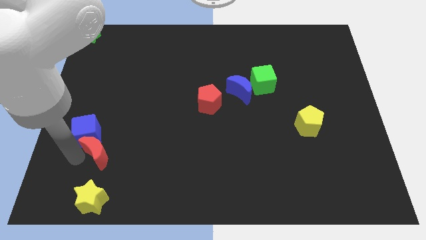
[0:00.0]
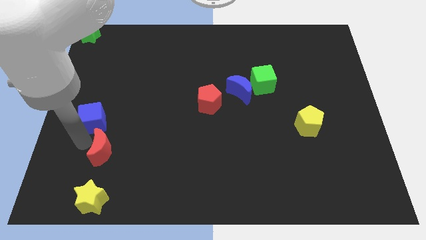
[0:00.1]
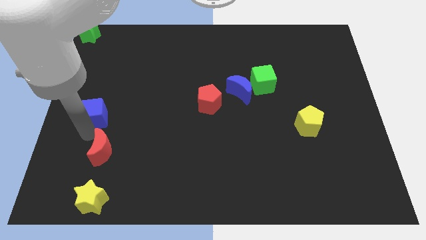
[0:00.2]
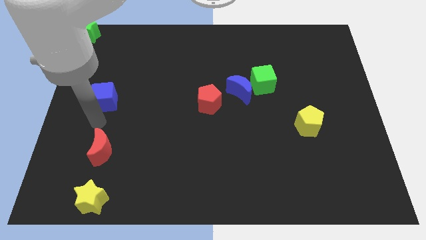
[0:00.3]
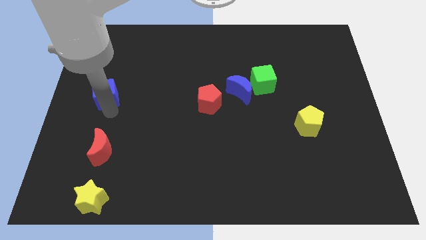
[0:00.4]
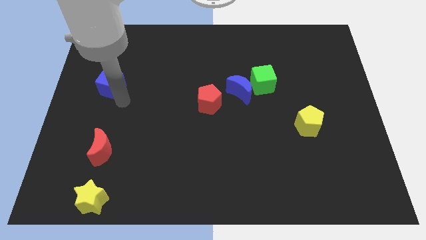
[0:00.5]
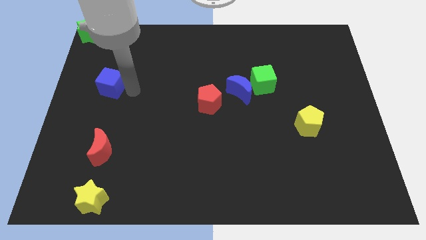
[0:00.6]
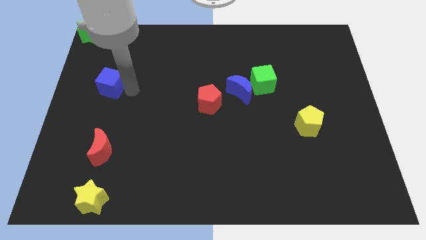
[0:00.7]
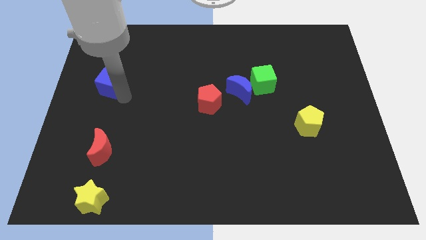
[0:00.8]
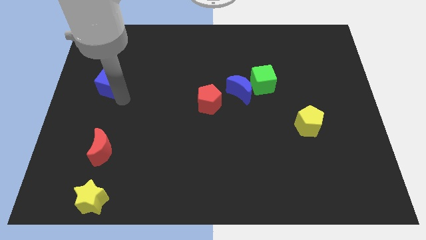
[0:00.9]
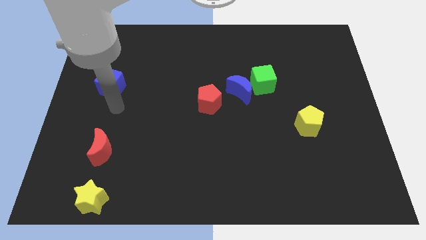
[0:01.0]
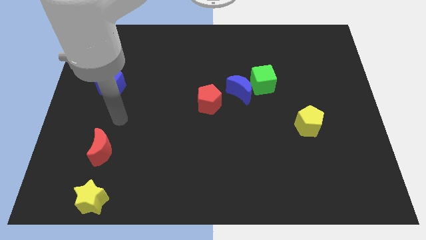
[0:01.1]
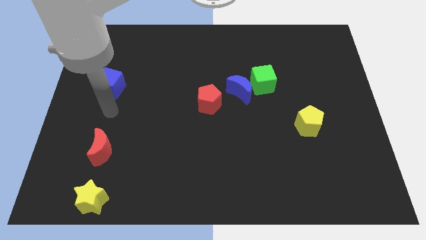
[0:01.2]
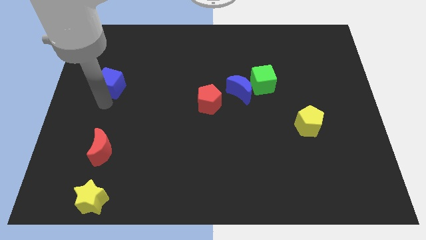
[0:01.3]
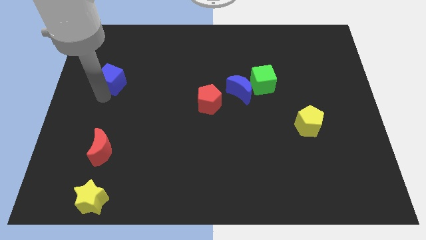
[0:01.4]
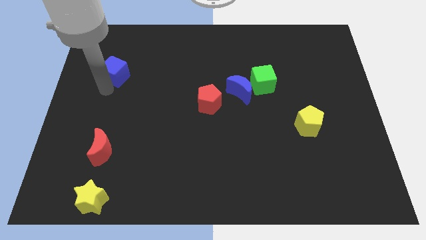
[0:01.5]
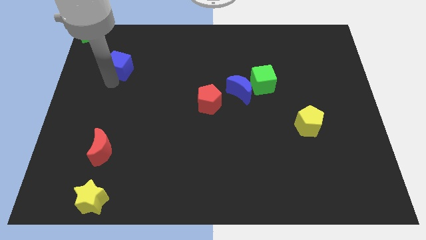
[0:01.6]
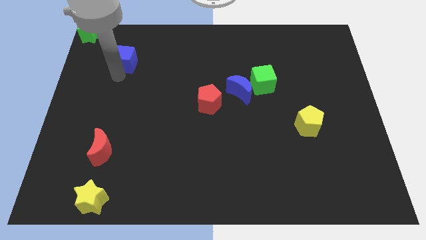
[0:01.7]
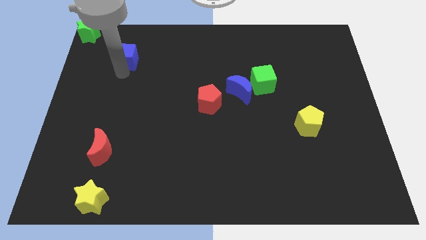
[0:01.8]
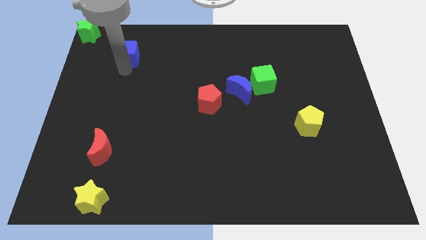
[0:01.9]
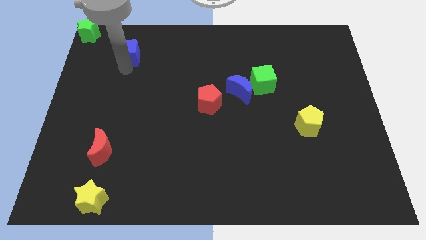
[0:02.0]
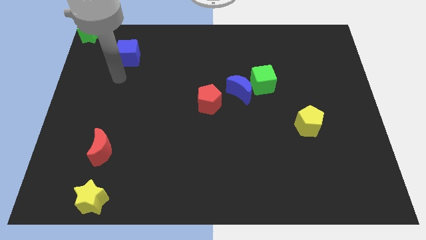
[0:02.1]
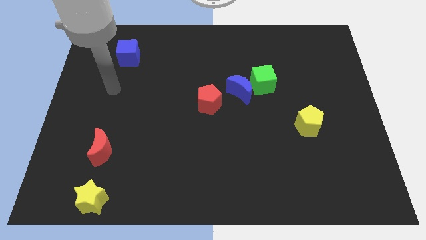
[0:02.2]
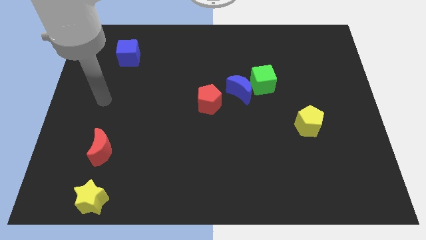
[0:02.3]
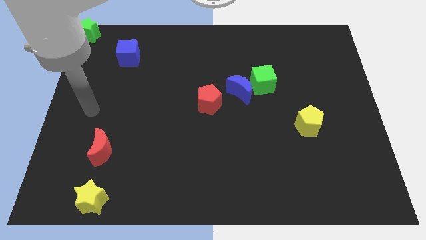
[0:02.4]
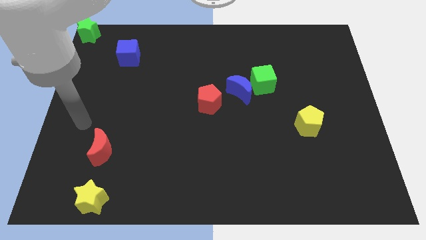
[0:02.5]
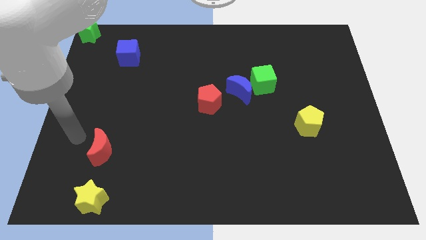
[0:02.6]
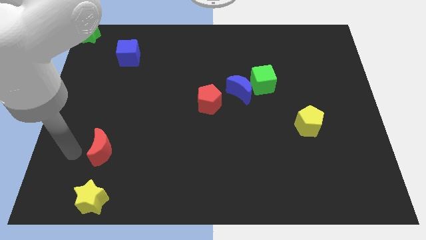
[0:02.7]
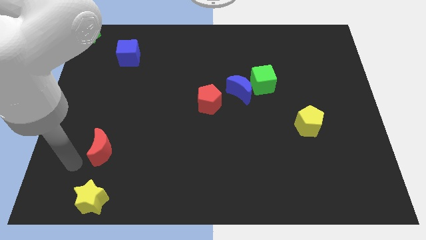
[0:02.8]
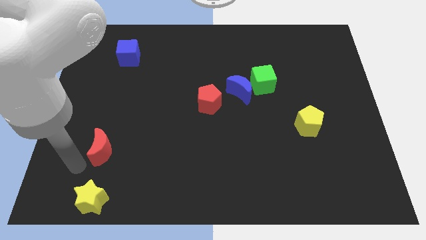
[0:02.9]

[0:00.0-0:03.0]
place the blue cube in between the green star and red pentagon

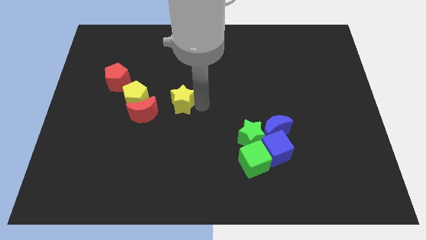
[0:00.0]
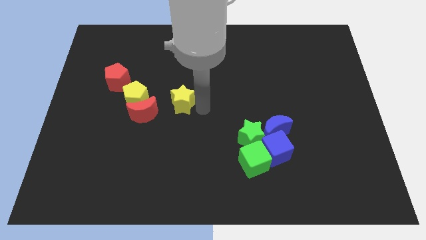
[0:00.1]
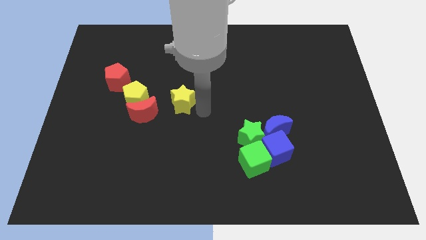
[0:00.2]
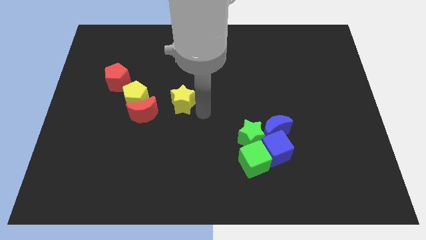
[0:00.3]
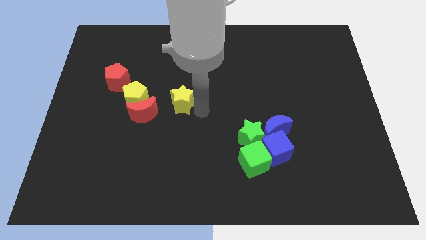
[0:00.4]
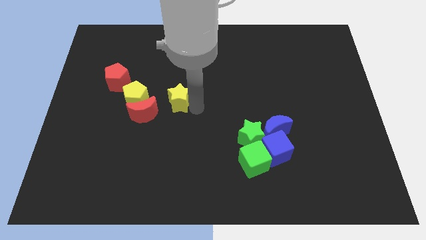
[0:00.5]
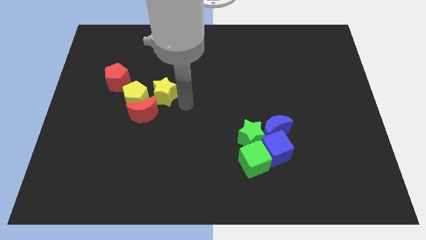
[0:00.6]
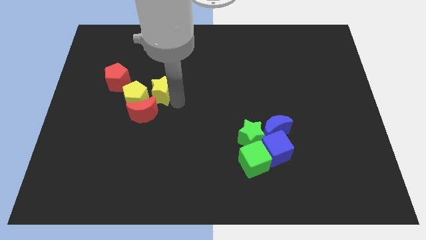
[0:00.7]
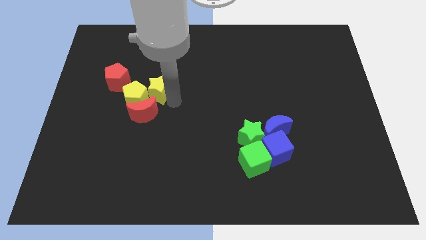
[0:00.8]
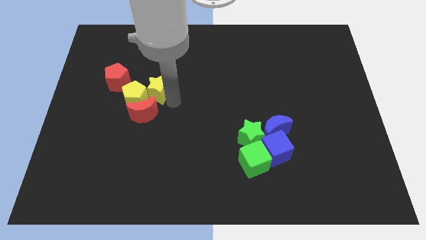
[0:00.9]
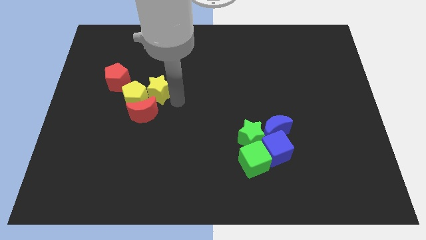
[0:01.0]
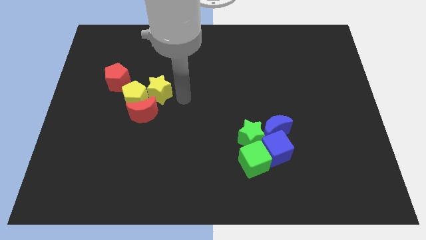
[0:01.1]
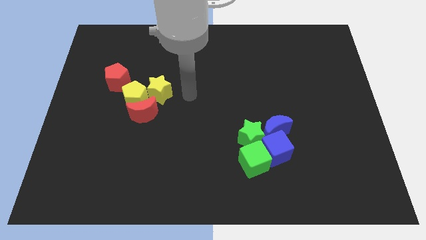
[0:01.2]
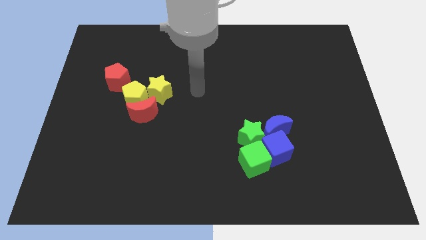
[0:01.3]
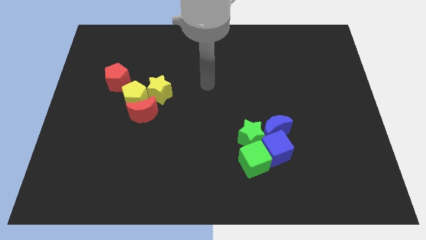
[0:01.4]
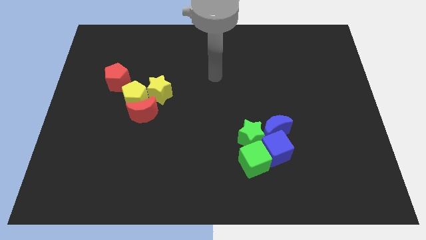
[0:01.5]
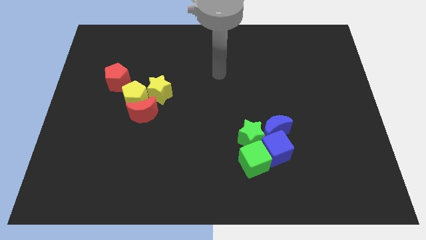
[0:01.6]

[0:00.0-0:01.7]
move the yellow star close to the yellow pentagon

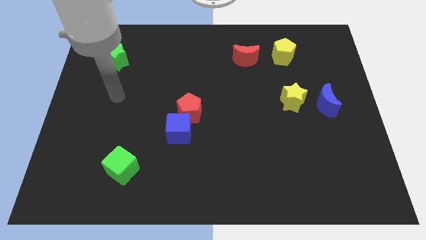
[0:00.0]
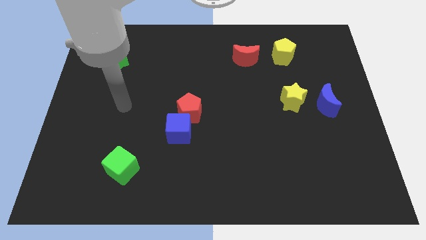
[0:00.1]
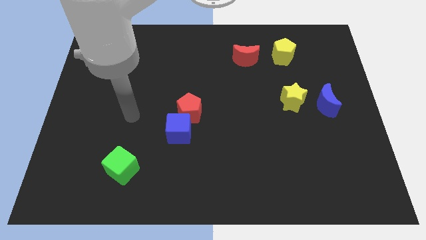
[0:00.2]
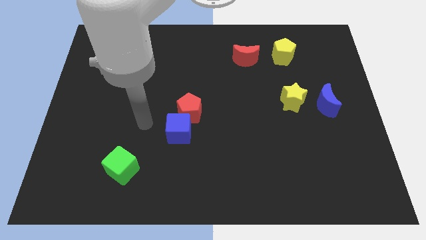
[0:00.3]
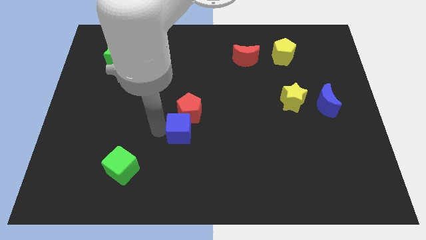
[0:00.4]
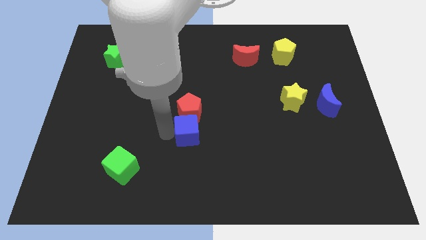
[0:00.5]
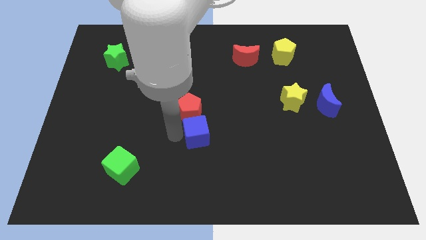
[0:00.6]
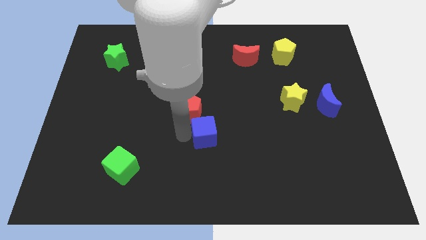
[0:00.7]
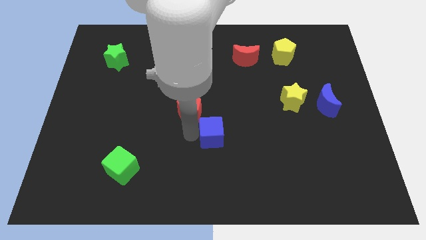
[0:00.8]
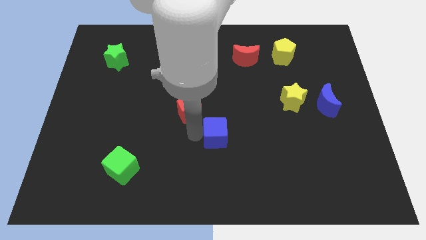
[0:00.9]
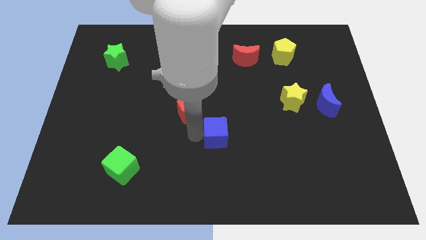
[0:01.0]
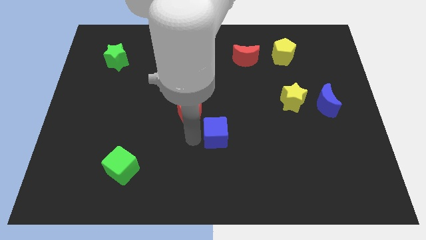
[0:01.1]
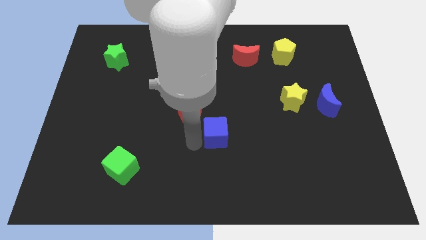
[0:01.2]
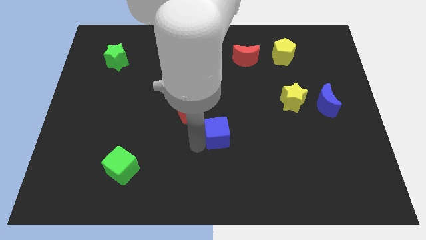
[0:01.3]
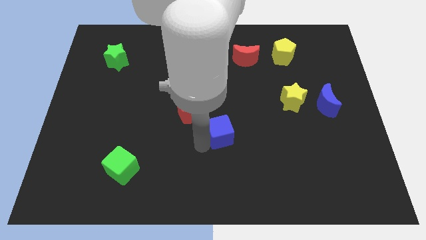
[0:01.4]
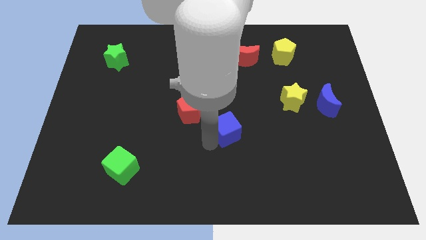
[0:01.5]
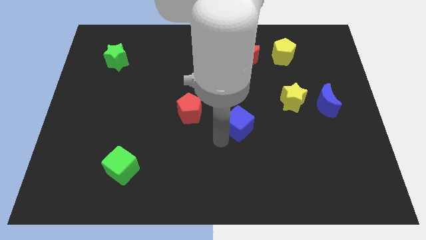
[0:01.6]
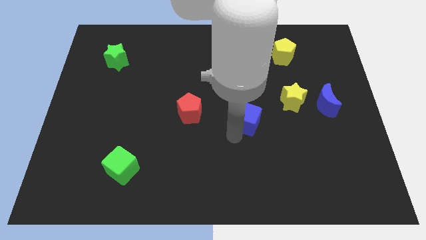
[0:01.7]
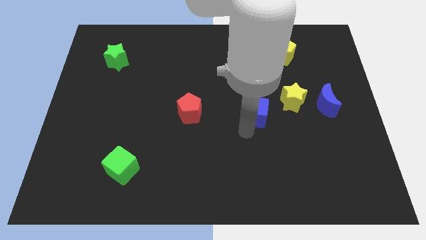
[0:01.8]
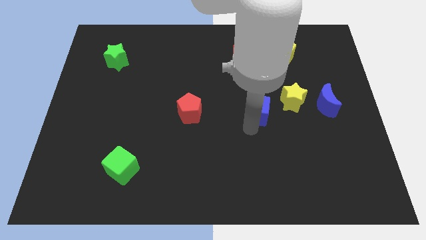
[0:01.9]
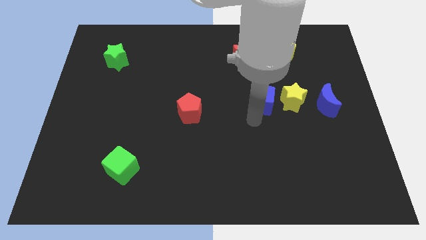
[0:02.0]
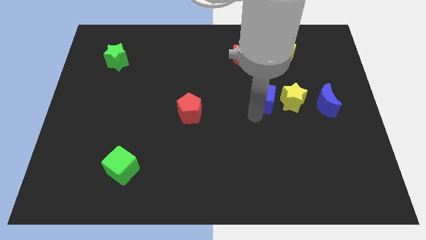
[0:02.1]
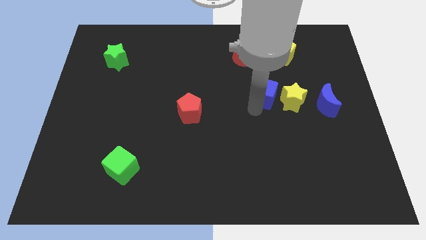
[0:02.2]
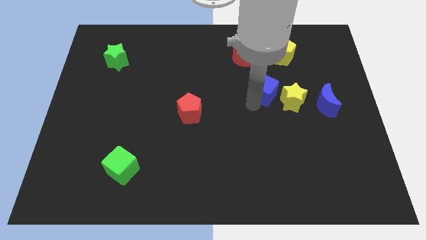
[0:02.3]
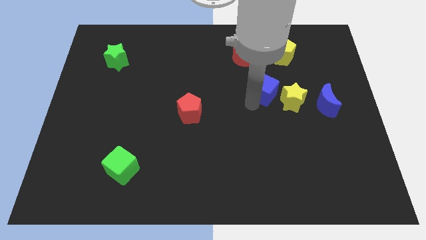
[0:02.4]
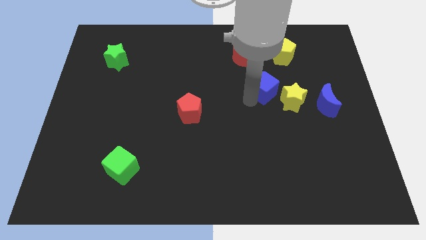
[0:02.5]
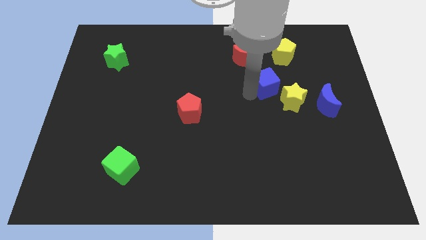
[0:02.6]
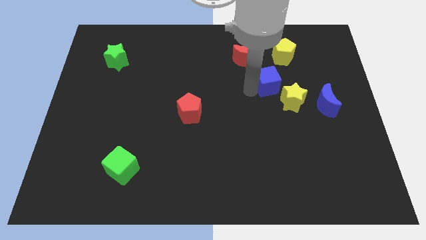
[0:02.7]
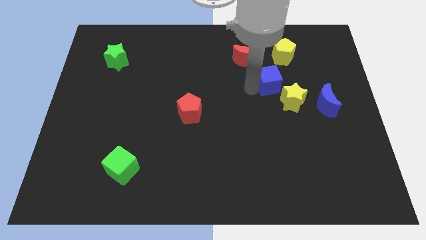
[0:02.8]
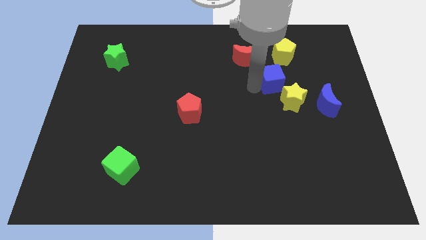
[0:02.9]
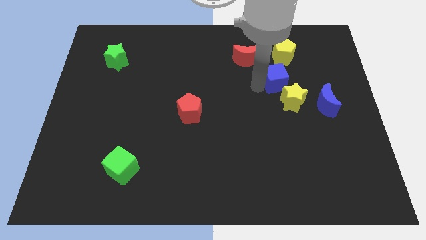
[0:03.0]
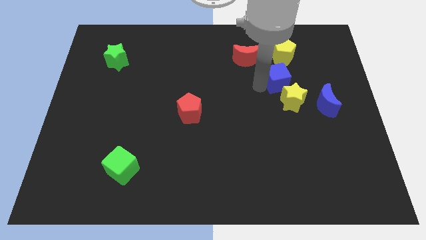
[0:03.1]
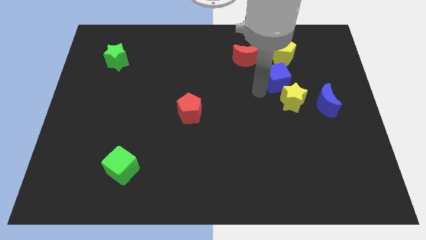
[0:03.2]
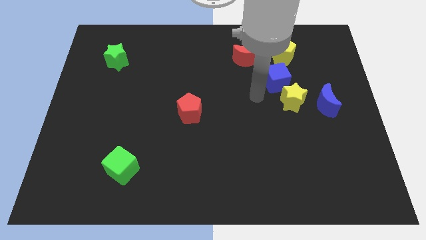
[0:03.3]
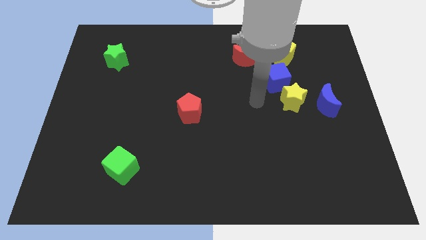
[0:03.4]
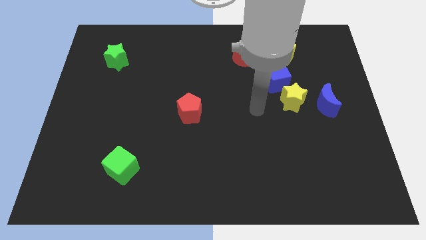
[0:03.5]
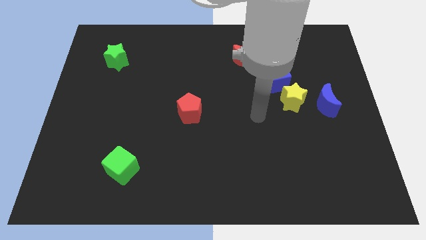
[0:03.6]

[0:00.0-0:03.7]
place the blue cube above the yellow star

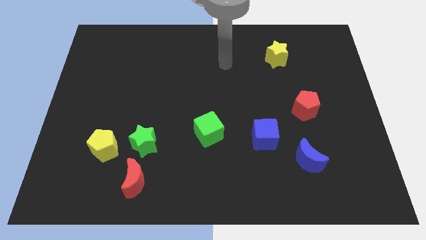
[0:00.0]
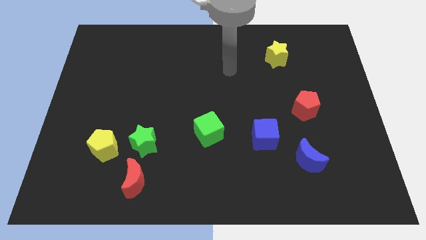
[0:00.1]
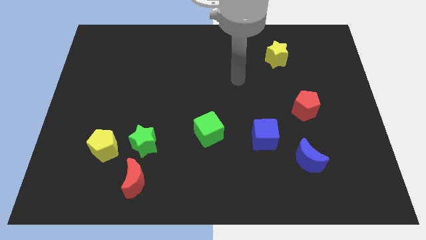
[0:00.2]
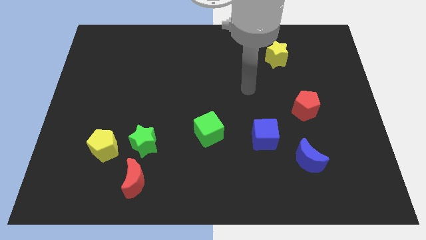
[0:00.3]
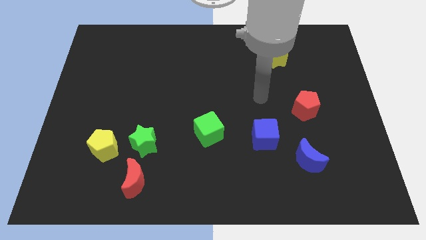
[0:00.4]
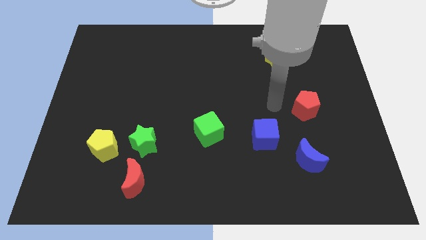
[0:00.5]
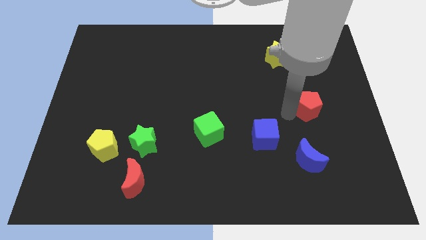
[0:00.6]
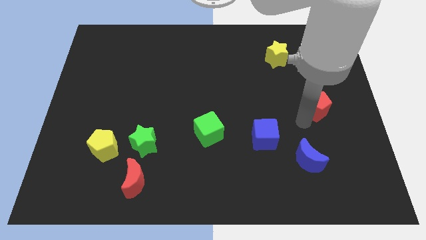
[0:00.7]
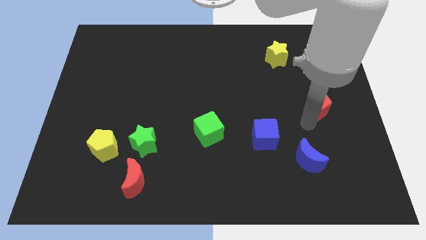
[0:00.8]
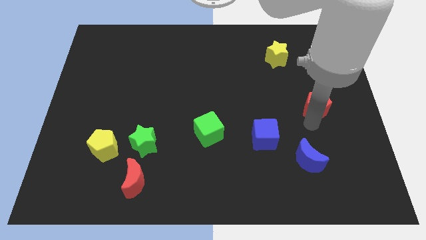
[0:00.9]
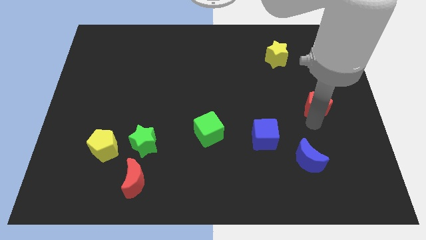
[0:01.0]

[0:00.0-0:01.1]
push the red pentagon slightly to the right
